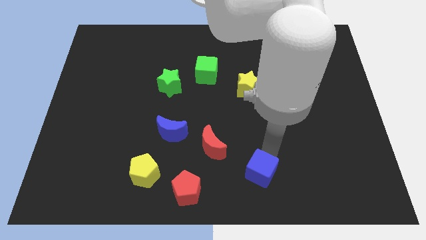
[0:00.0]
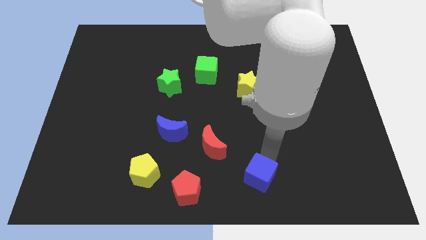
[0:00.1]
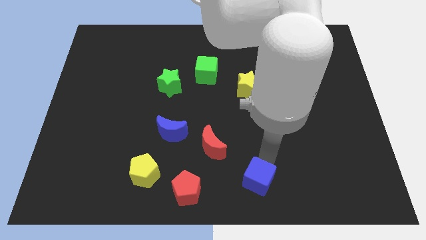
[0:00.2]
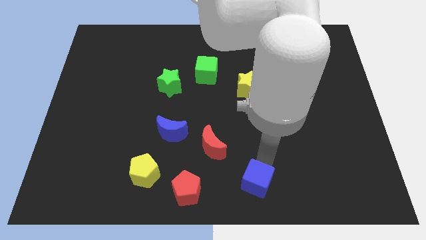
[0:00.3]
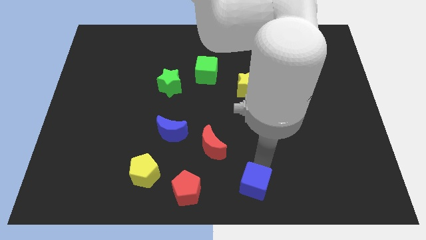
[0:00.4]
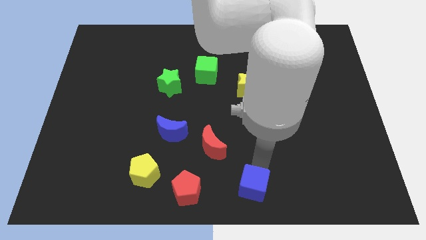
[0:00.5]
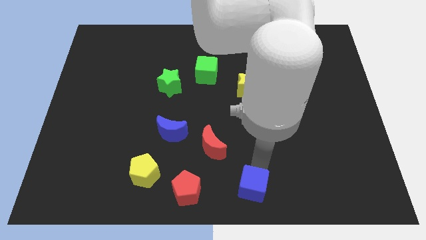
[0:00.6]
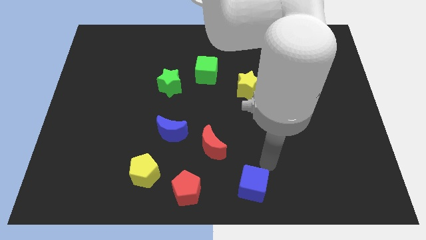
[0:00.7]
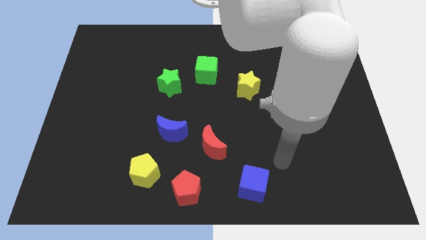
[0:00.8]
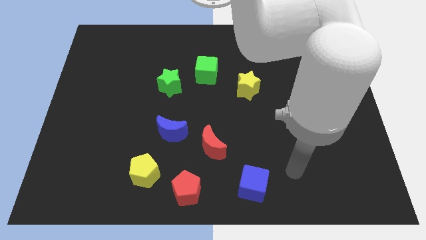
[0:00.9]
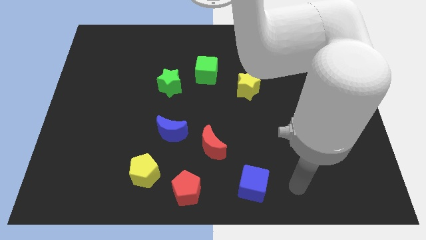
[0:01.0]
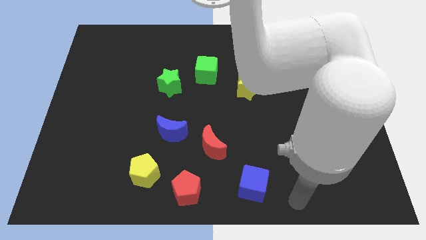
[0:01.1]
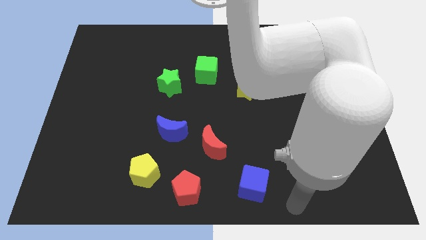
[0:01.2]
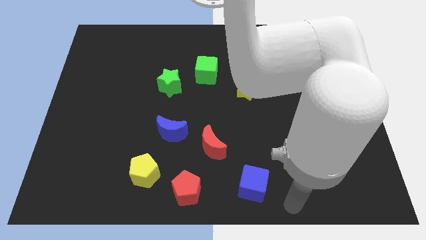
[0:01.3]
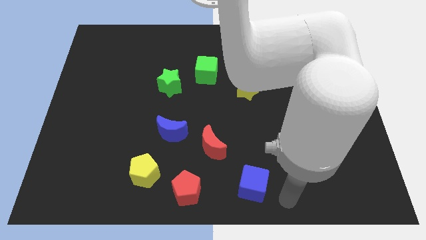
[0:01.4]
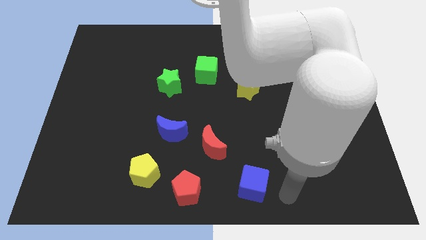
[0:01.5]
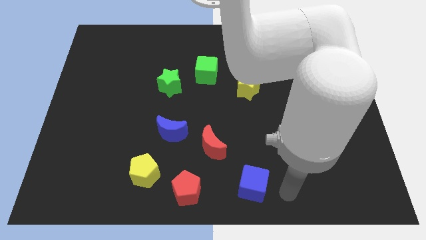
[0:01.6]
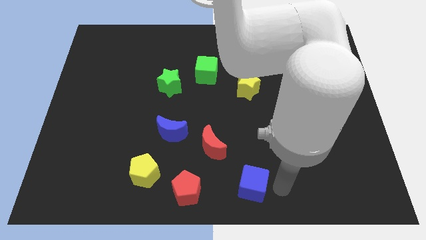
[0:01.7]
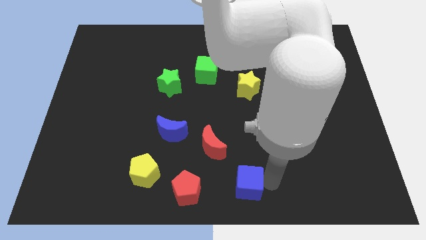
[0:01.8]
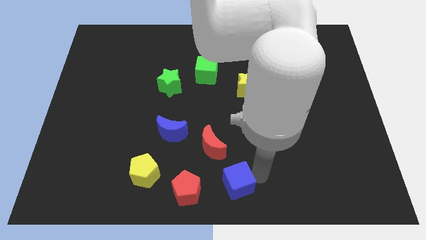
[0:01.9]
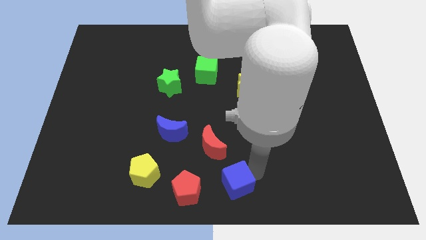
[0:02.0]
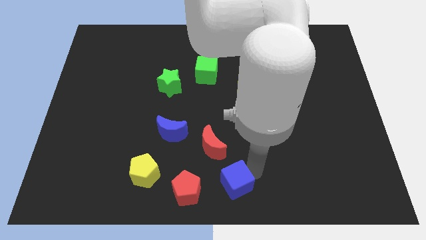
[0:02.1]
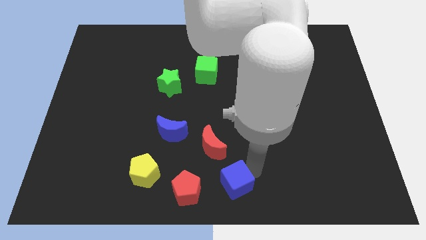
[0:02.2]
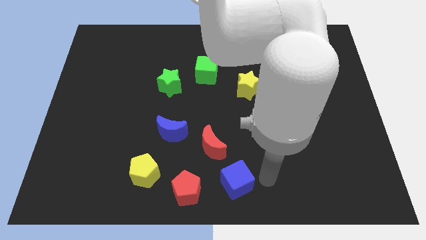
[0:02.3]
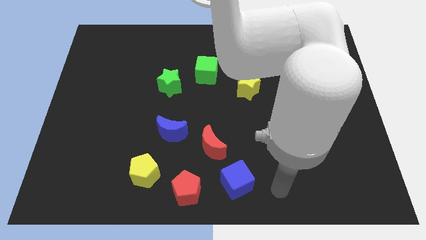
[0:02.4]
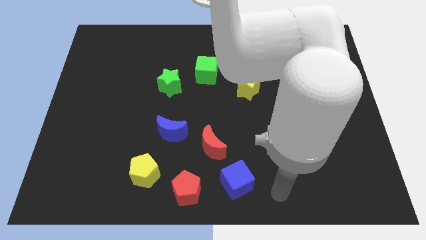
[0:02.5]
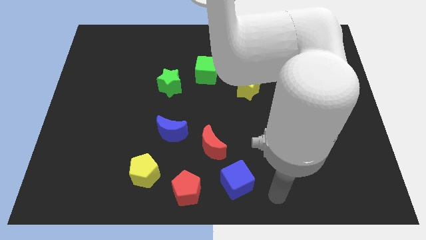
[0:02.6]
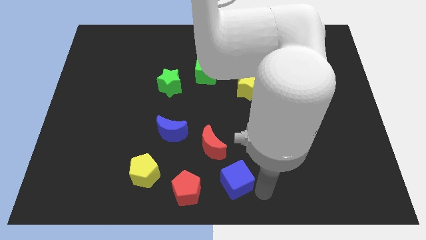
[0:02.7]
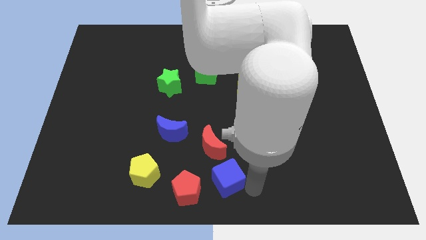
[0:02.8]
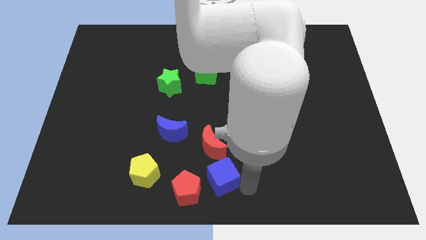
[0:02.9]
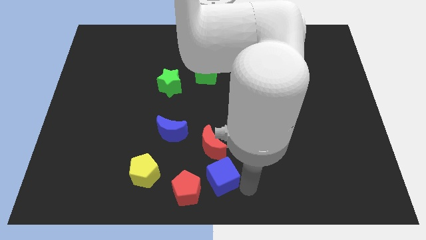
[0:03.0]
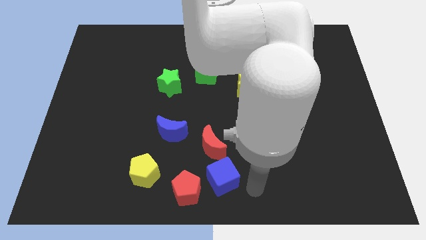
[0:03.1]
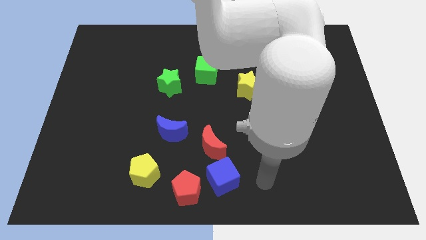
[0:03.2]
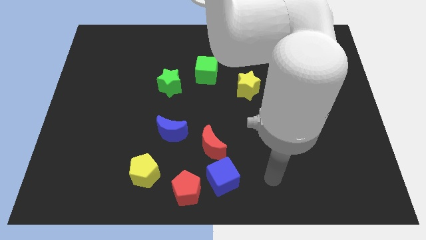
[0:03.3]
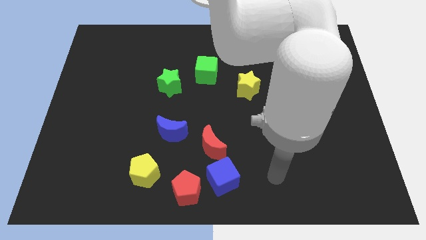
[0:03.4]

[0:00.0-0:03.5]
push the blue cube towards the left side of the board

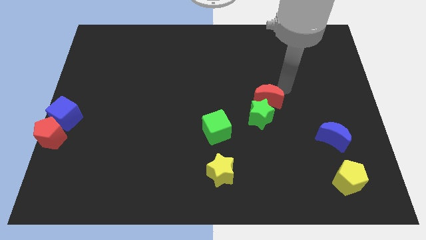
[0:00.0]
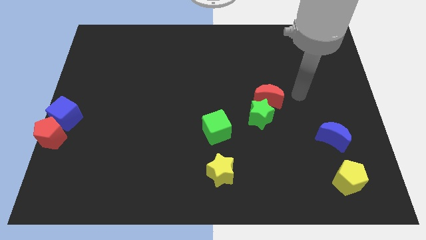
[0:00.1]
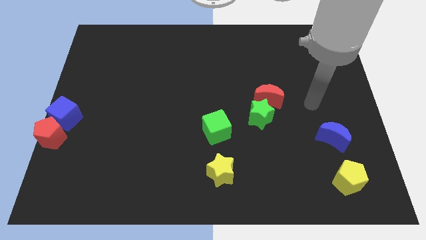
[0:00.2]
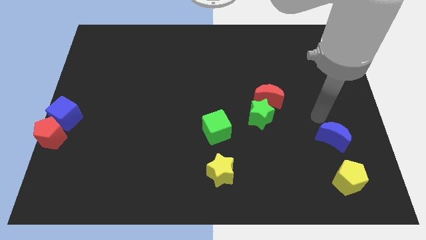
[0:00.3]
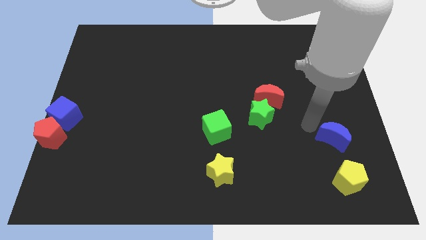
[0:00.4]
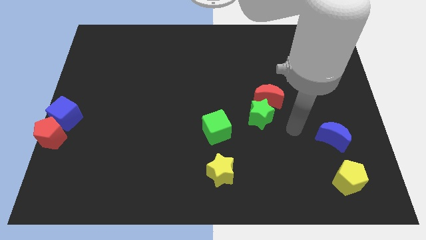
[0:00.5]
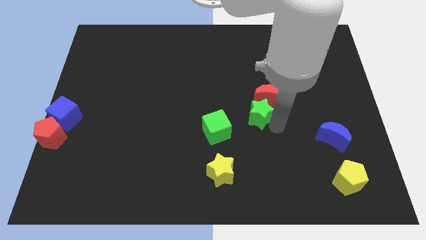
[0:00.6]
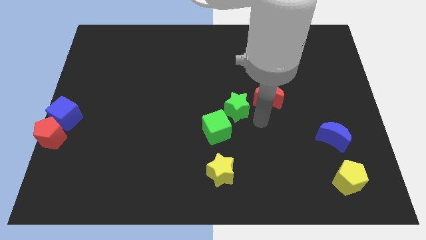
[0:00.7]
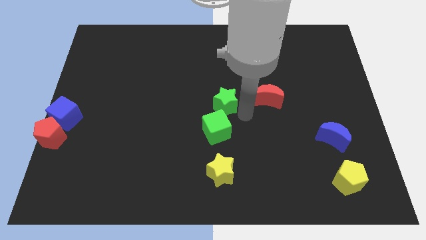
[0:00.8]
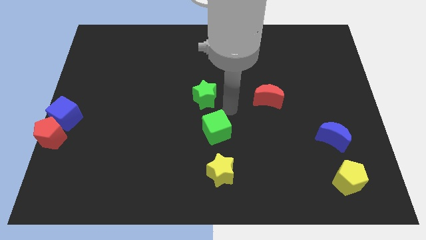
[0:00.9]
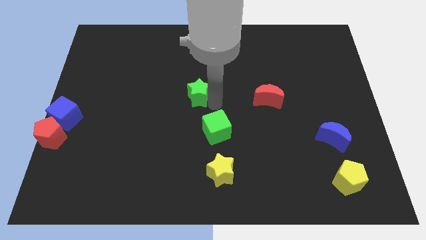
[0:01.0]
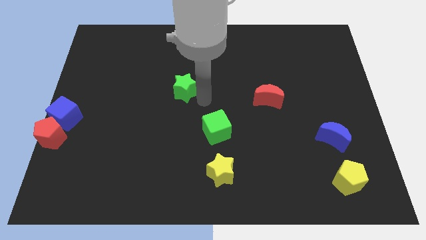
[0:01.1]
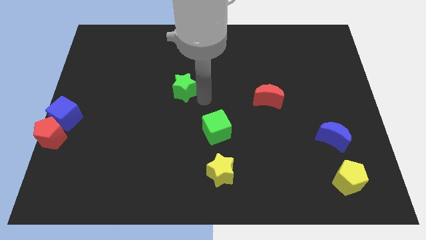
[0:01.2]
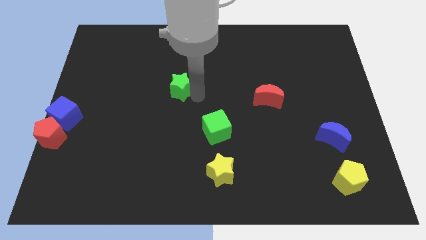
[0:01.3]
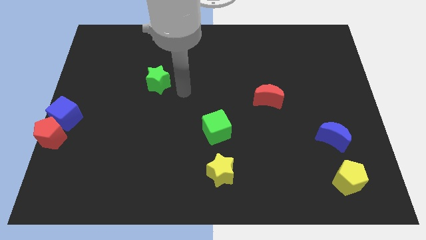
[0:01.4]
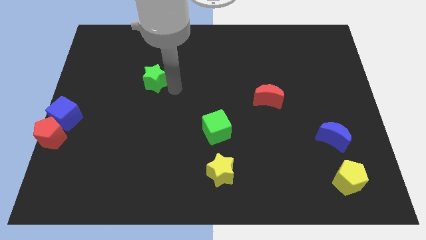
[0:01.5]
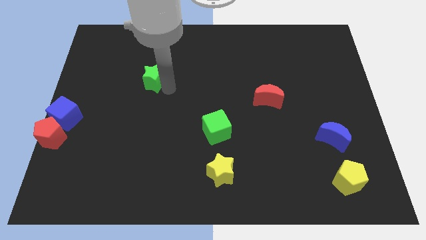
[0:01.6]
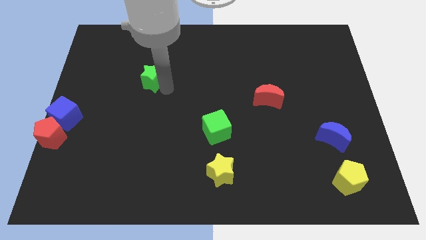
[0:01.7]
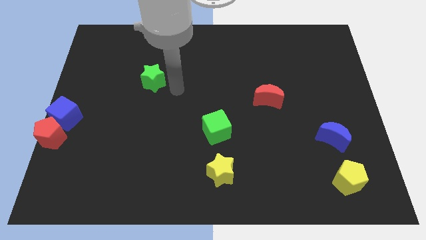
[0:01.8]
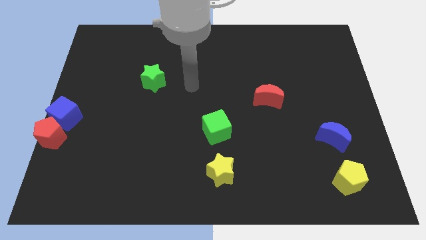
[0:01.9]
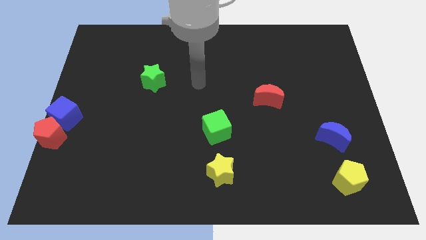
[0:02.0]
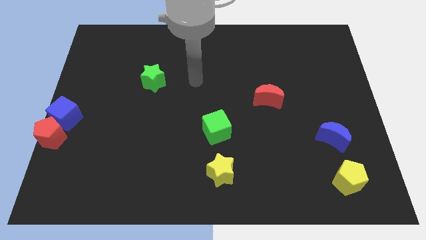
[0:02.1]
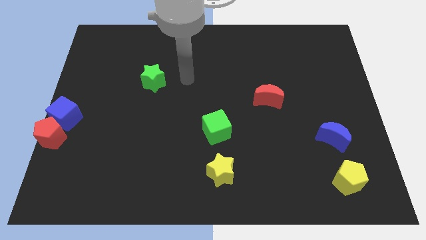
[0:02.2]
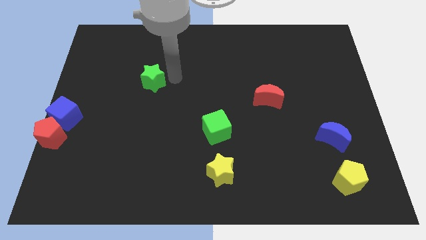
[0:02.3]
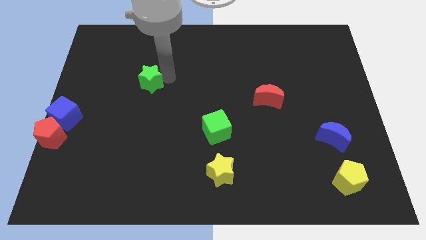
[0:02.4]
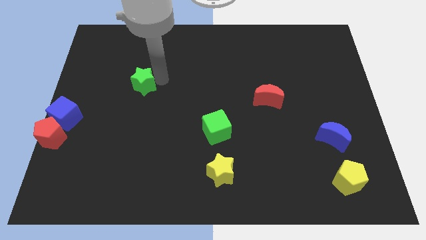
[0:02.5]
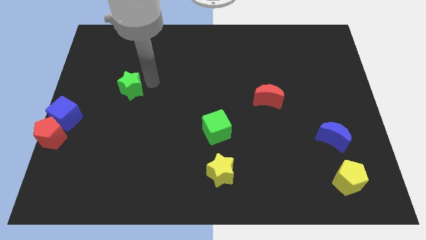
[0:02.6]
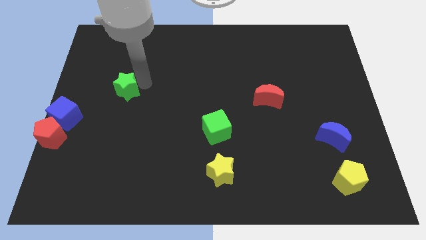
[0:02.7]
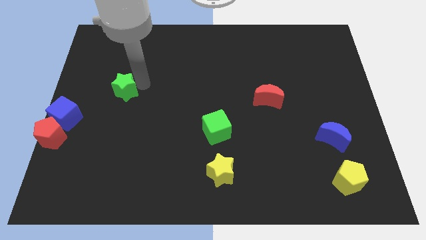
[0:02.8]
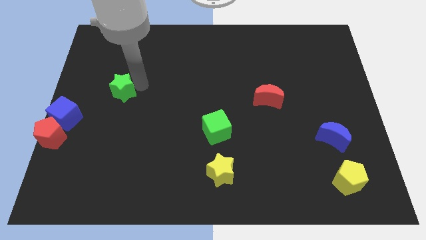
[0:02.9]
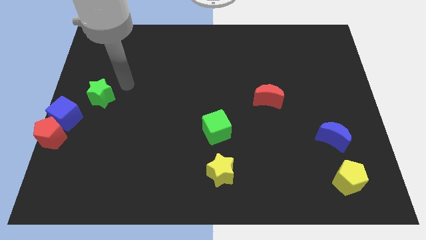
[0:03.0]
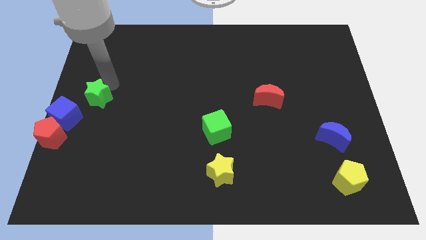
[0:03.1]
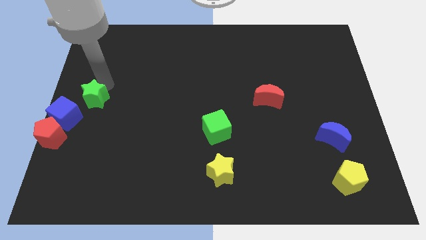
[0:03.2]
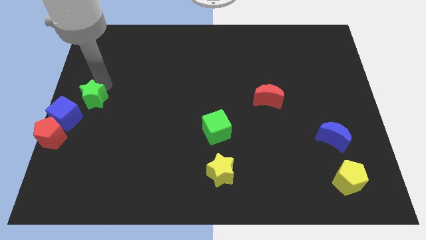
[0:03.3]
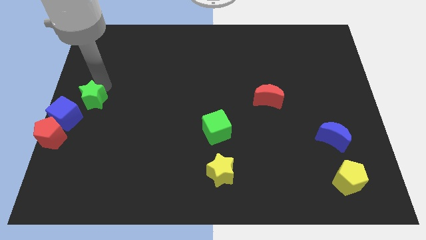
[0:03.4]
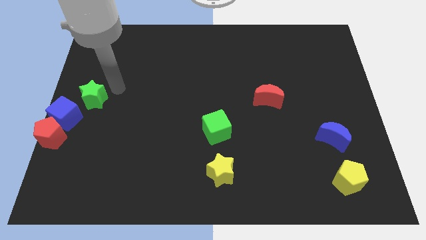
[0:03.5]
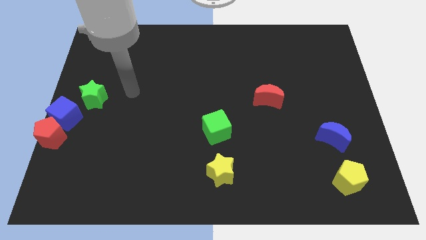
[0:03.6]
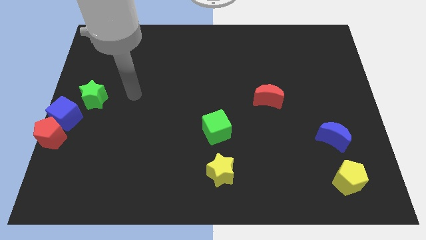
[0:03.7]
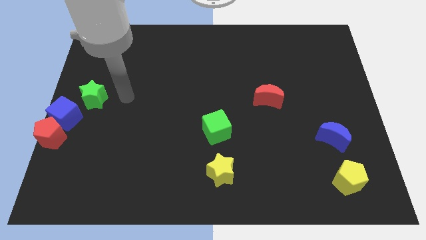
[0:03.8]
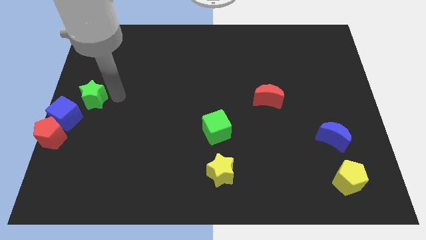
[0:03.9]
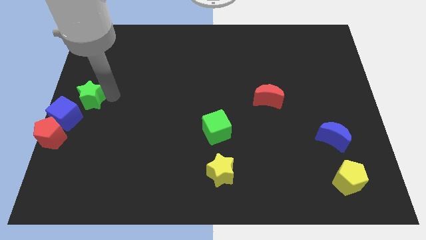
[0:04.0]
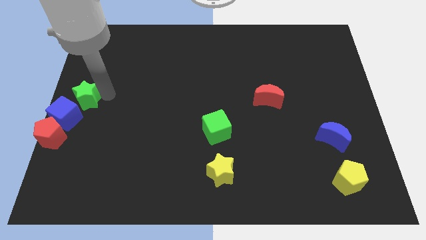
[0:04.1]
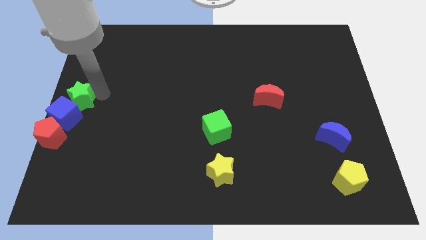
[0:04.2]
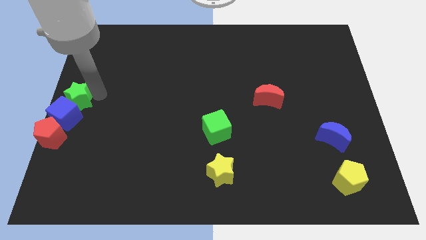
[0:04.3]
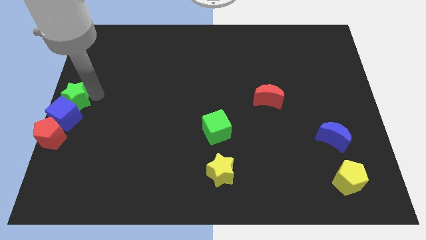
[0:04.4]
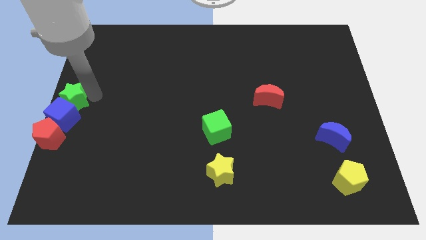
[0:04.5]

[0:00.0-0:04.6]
place green star to the top of blue cube

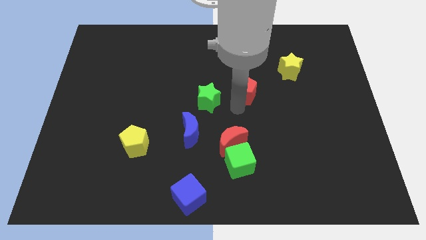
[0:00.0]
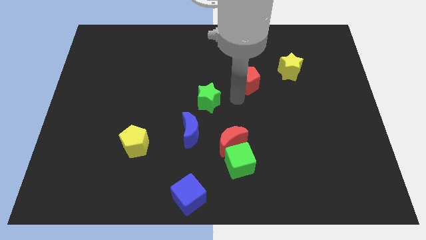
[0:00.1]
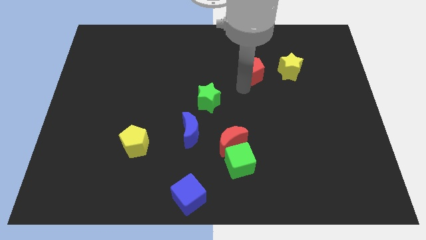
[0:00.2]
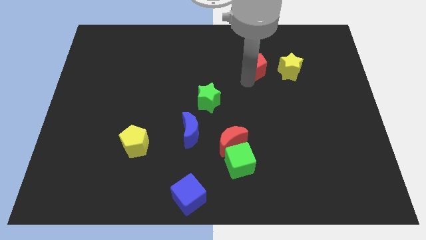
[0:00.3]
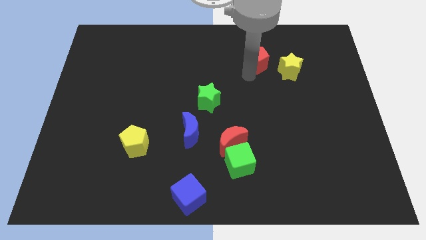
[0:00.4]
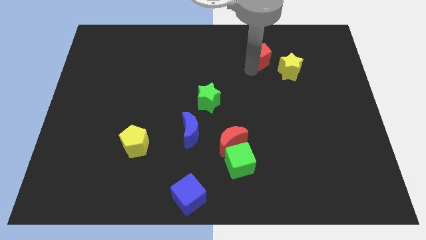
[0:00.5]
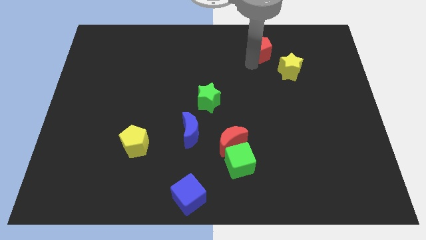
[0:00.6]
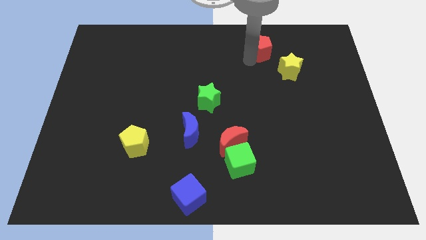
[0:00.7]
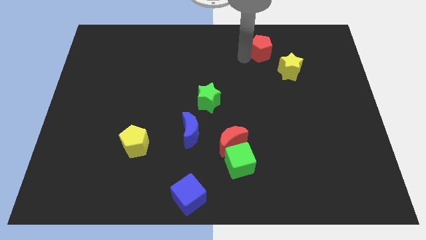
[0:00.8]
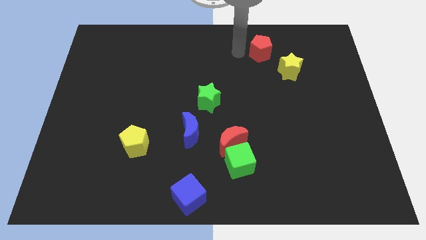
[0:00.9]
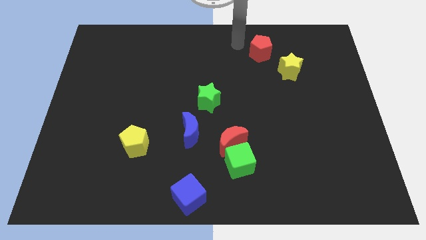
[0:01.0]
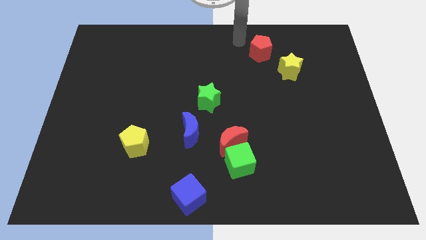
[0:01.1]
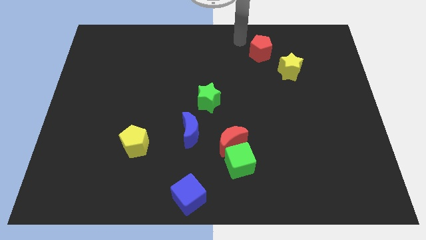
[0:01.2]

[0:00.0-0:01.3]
move the red pentagon diagonally on the top left side of the yellow star
